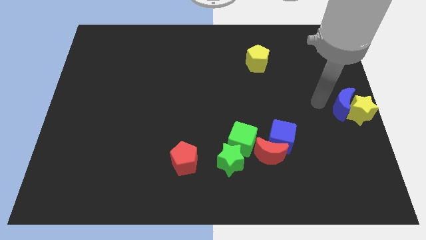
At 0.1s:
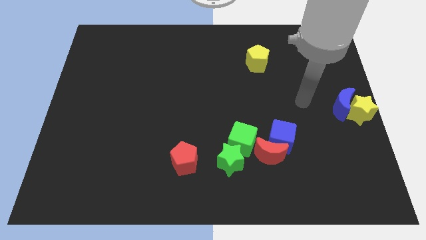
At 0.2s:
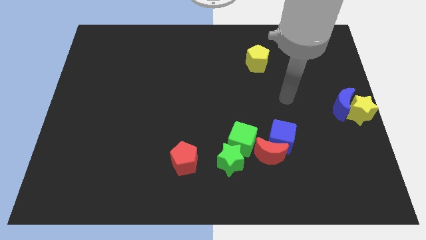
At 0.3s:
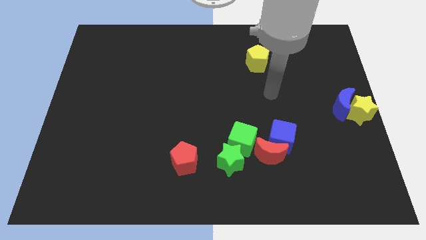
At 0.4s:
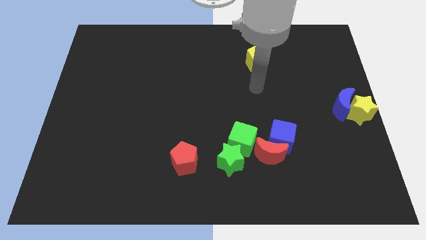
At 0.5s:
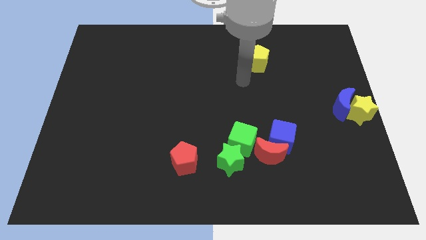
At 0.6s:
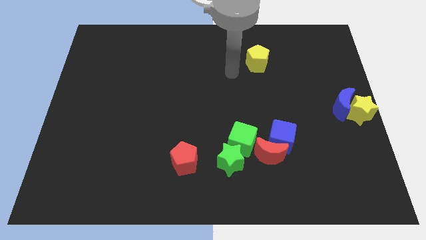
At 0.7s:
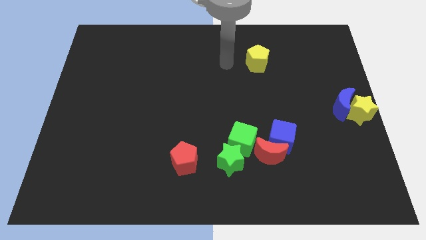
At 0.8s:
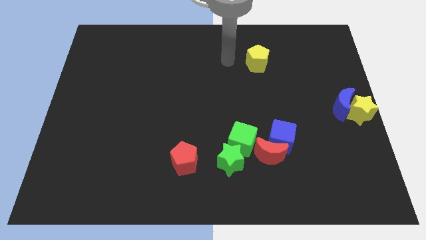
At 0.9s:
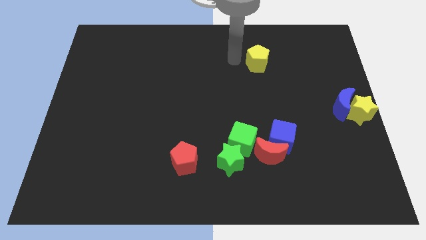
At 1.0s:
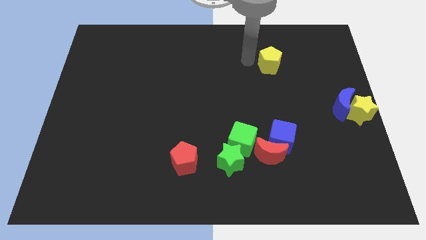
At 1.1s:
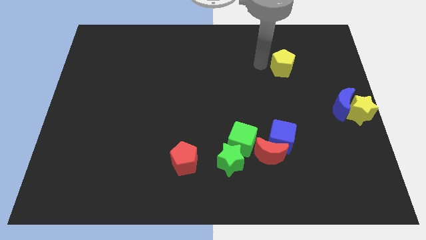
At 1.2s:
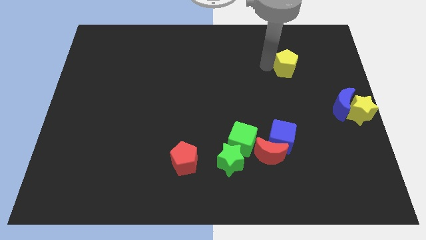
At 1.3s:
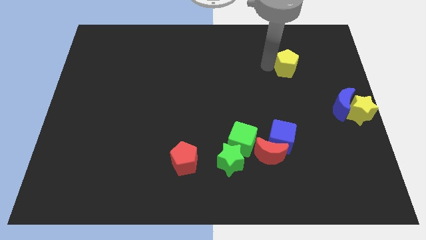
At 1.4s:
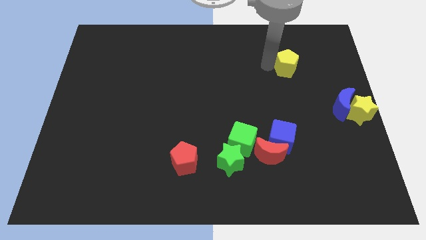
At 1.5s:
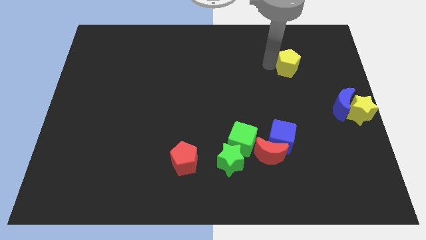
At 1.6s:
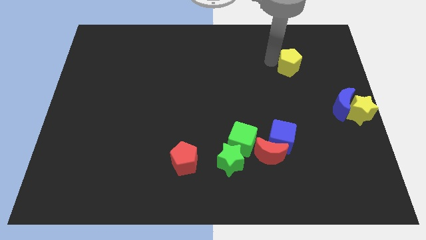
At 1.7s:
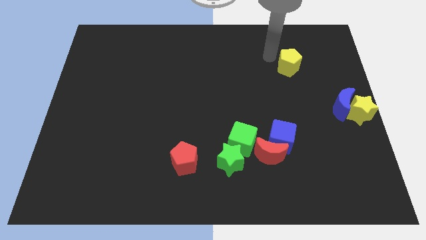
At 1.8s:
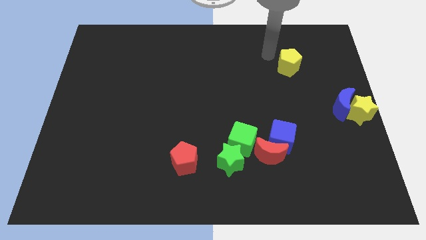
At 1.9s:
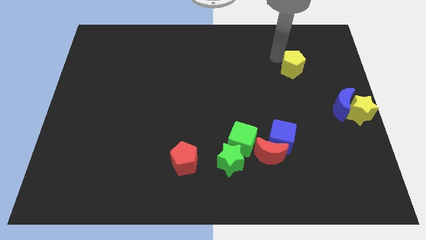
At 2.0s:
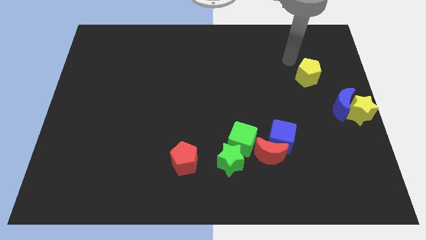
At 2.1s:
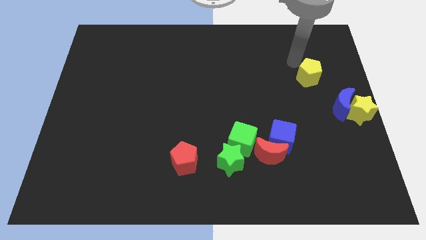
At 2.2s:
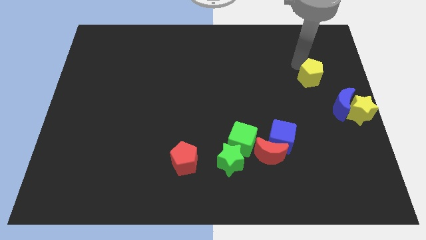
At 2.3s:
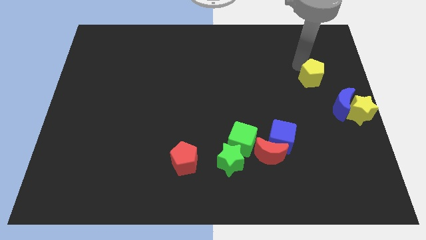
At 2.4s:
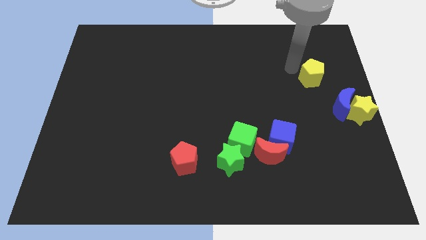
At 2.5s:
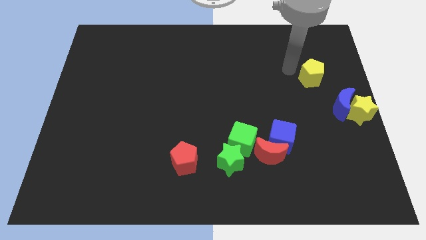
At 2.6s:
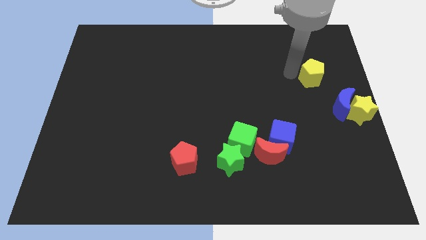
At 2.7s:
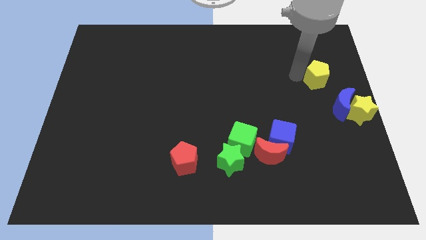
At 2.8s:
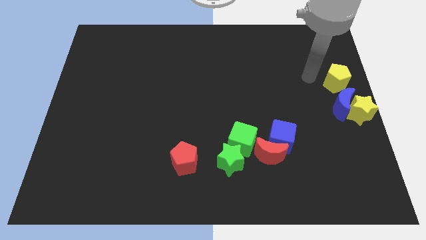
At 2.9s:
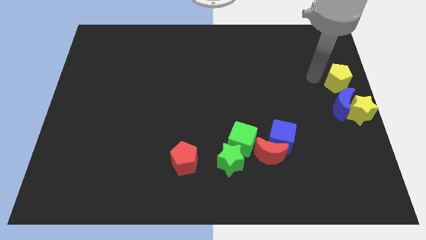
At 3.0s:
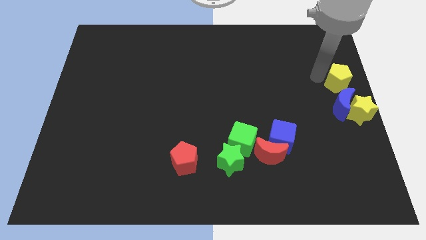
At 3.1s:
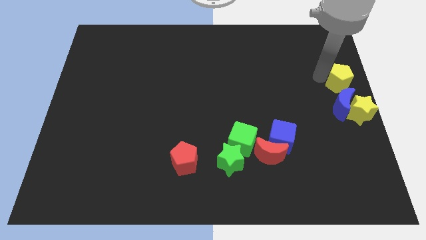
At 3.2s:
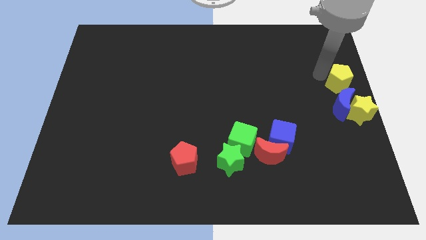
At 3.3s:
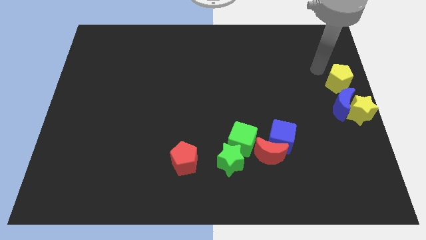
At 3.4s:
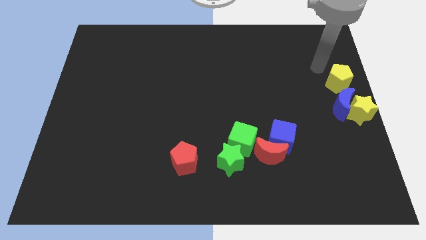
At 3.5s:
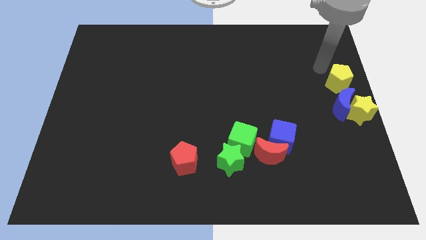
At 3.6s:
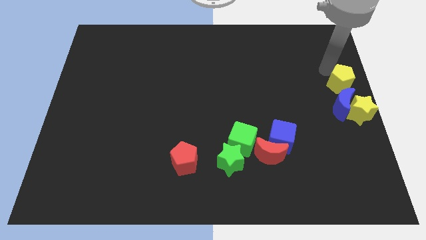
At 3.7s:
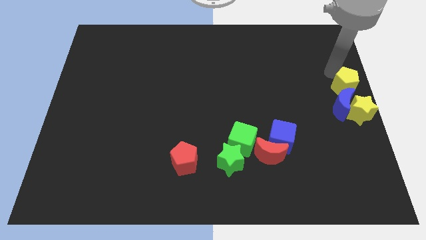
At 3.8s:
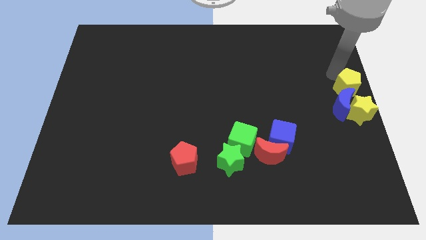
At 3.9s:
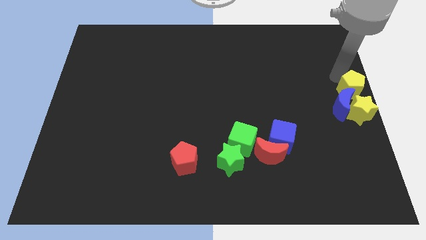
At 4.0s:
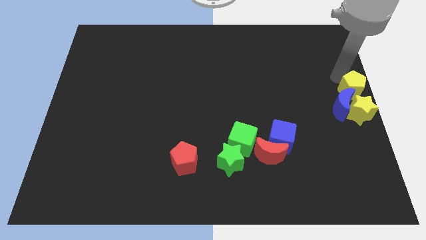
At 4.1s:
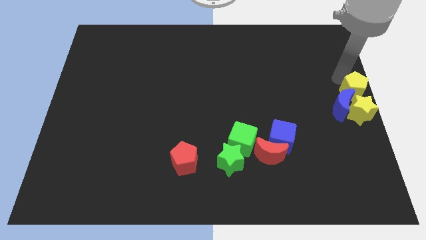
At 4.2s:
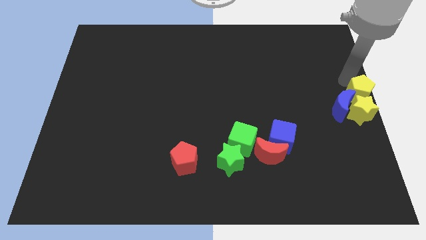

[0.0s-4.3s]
move the yellow pentagon into the group of blocks

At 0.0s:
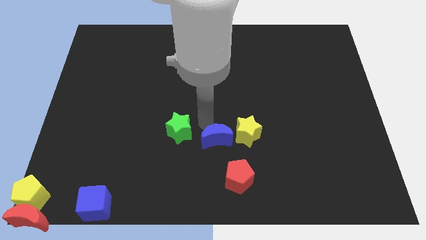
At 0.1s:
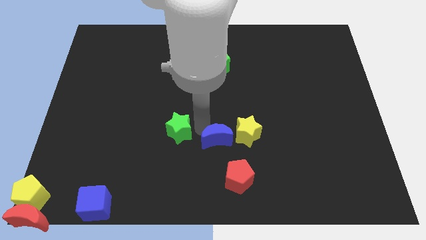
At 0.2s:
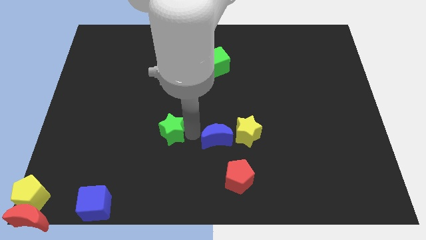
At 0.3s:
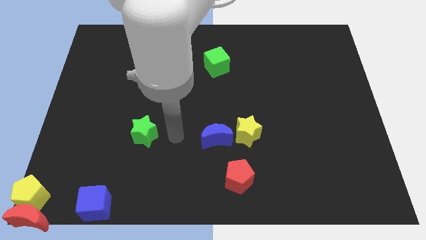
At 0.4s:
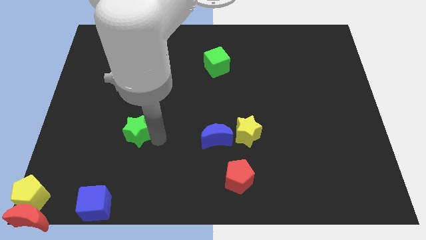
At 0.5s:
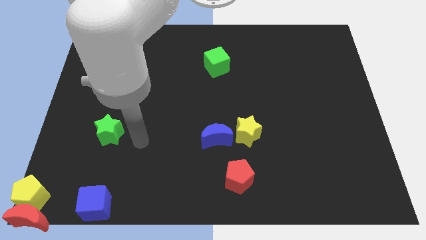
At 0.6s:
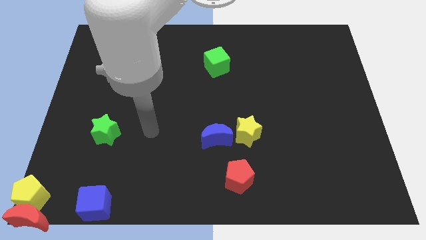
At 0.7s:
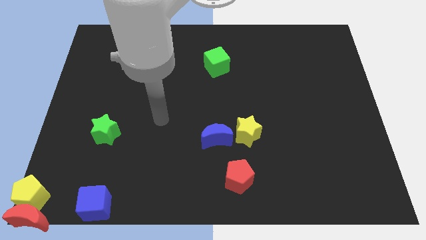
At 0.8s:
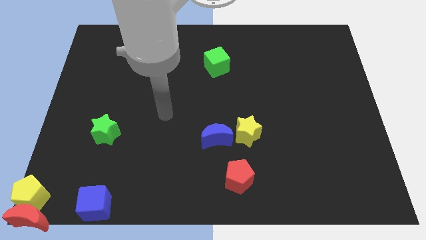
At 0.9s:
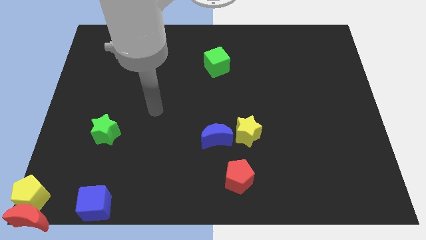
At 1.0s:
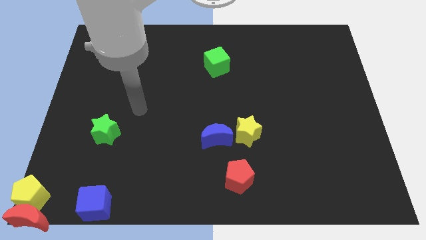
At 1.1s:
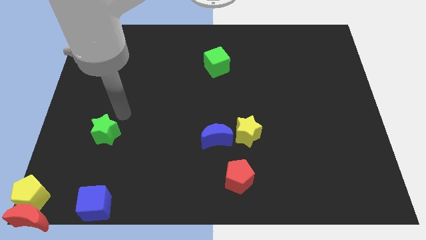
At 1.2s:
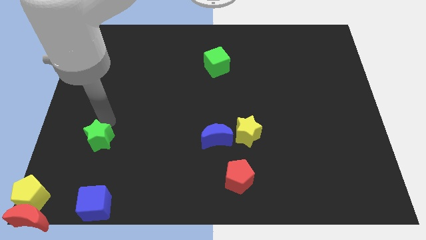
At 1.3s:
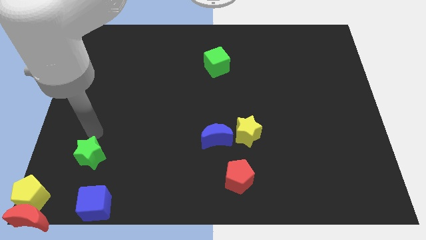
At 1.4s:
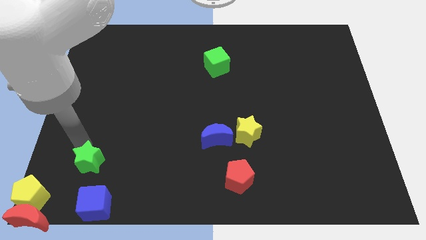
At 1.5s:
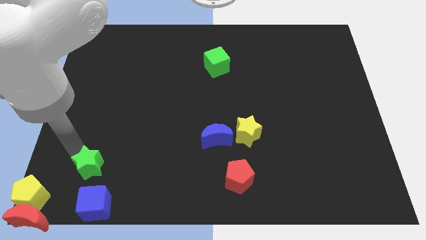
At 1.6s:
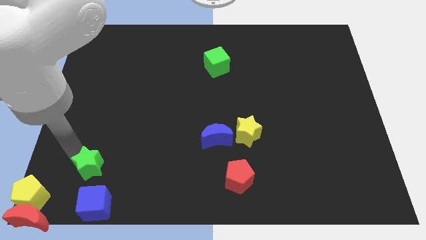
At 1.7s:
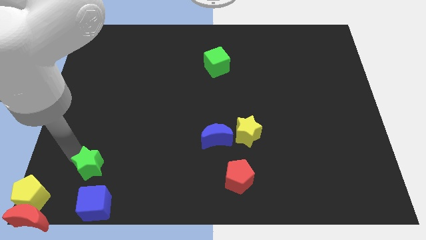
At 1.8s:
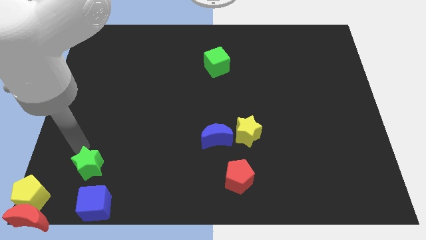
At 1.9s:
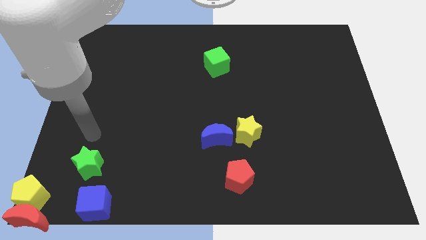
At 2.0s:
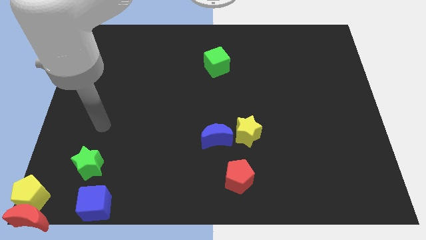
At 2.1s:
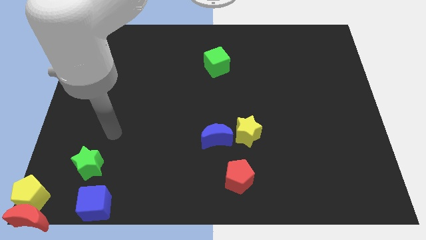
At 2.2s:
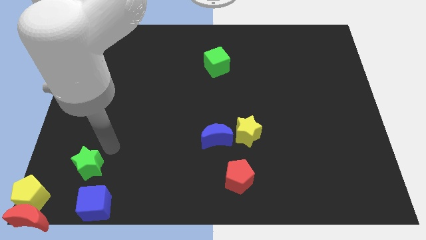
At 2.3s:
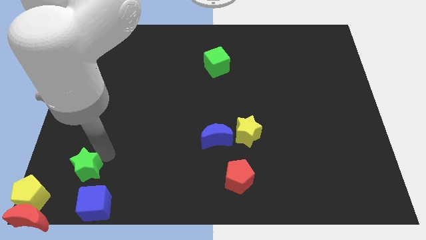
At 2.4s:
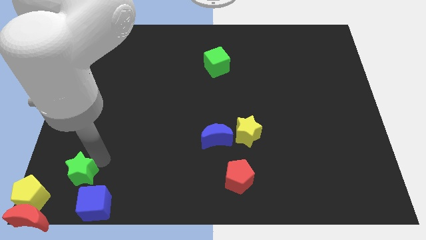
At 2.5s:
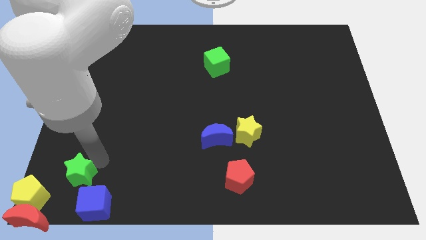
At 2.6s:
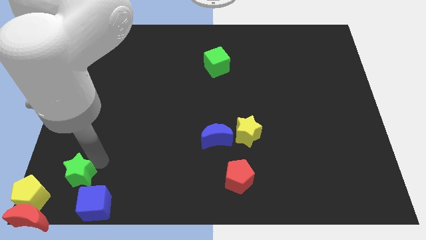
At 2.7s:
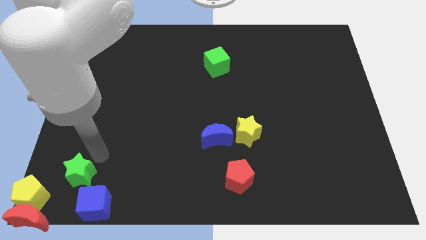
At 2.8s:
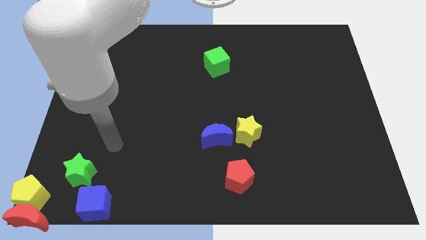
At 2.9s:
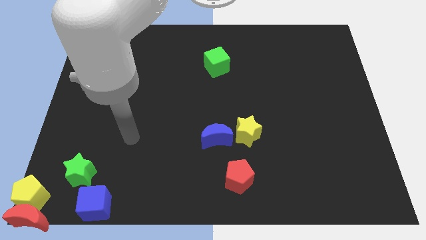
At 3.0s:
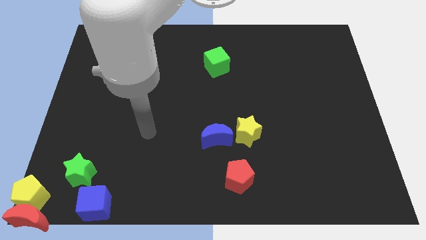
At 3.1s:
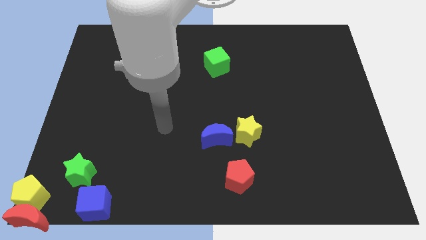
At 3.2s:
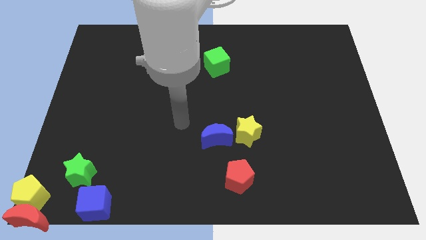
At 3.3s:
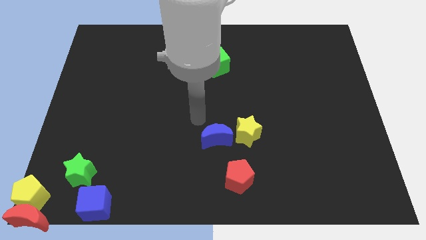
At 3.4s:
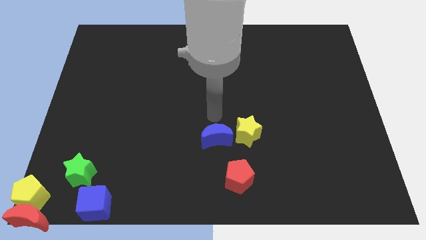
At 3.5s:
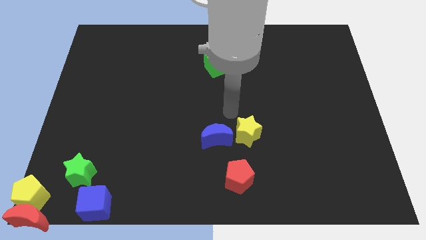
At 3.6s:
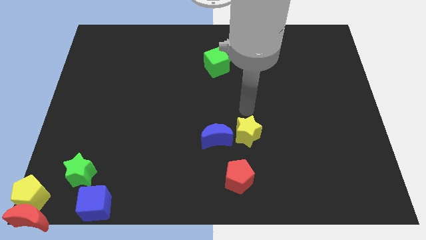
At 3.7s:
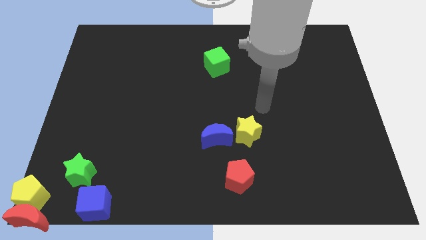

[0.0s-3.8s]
push the star towards the top of the blue crescent

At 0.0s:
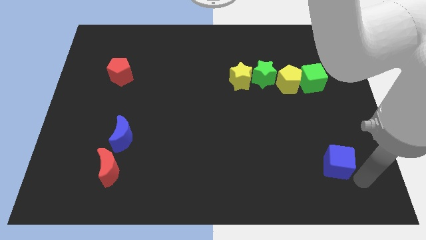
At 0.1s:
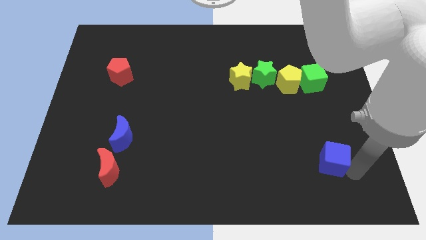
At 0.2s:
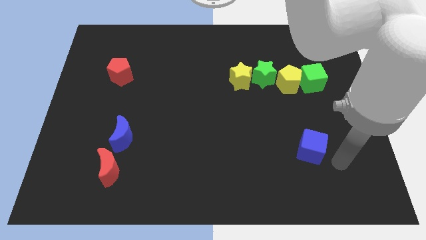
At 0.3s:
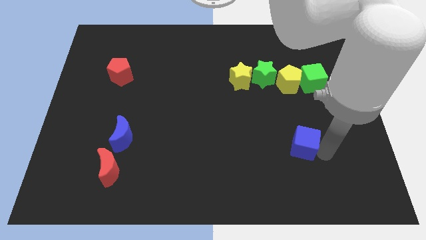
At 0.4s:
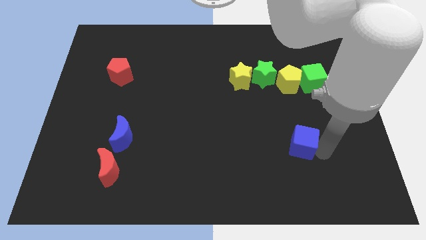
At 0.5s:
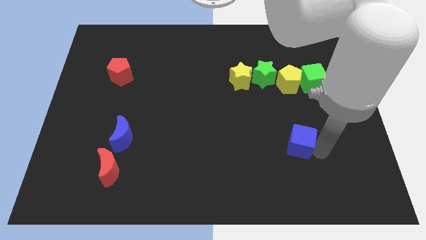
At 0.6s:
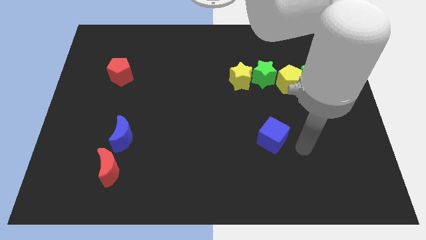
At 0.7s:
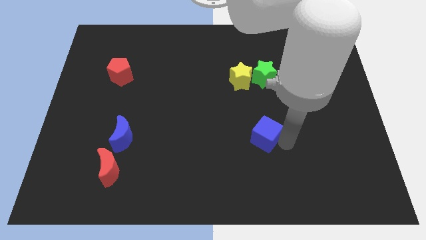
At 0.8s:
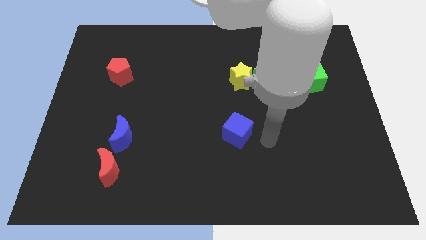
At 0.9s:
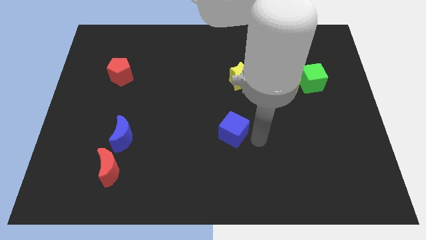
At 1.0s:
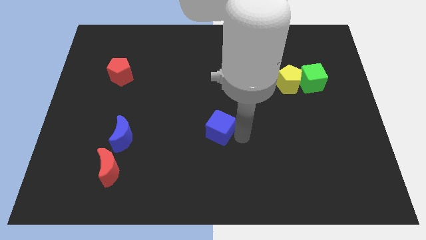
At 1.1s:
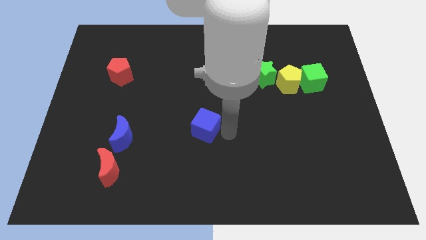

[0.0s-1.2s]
push the blue cube towards the center of the board
